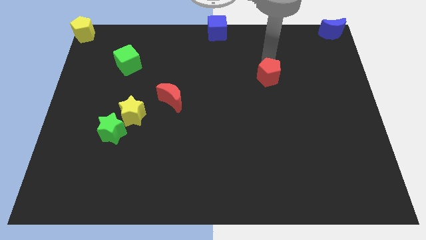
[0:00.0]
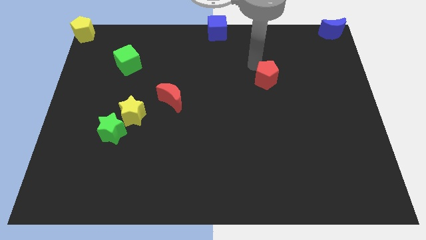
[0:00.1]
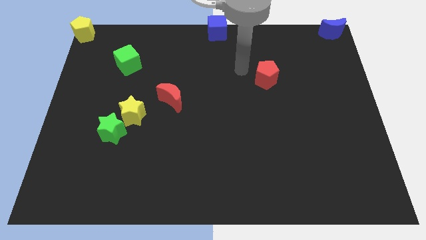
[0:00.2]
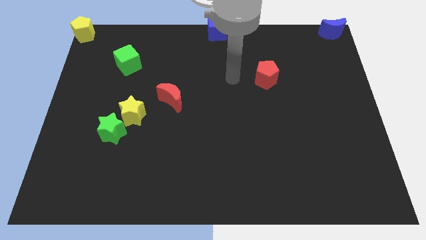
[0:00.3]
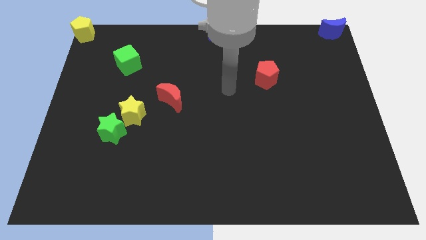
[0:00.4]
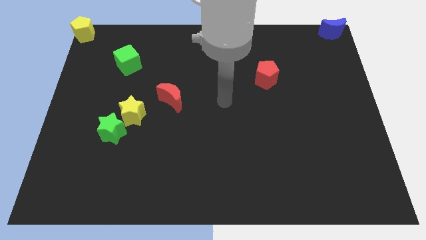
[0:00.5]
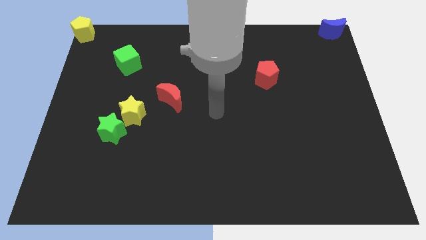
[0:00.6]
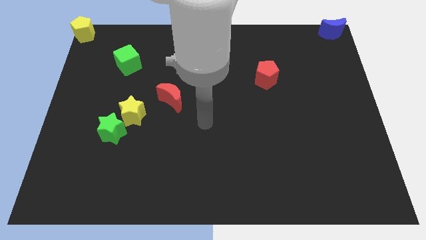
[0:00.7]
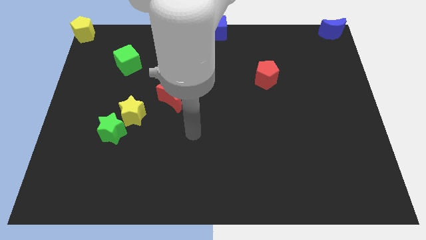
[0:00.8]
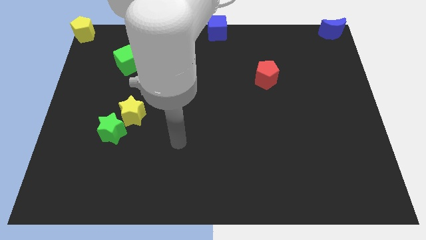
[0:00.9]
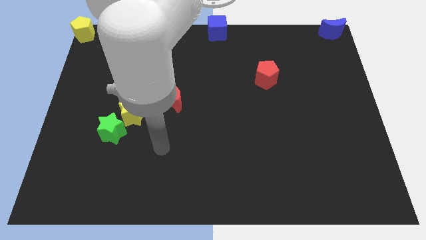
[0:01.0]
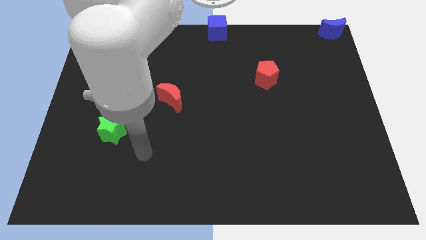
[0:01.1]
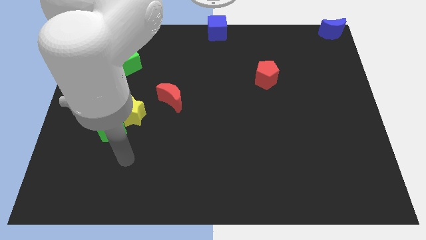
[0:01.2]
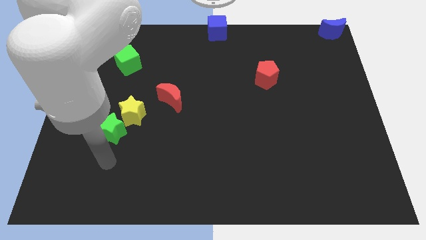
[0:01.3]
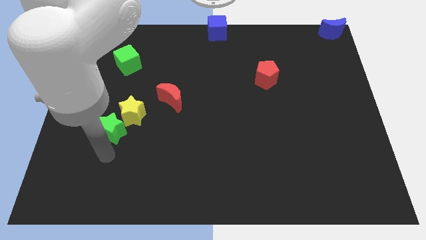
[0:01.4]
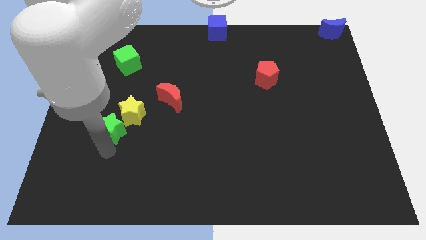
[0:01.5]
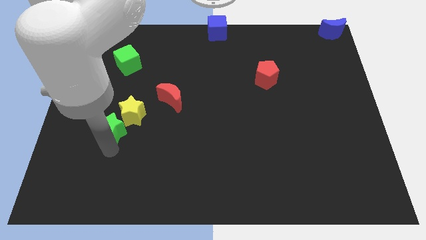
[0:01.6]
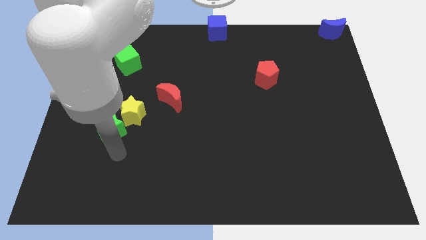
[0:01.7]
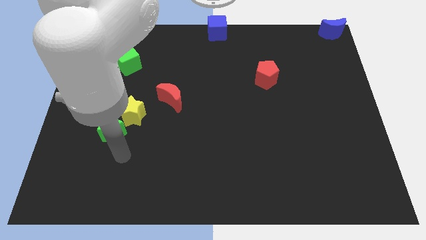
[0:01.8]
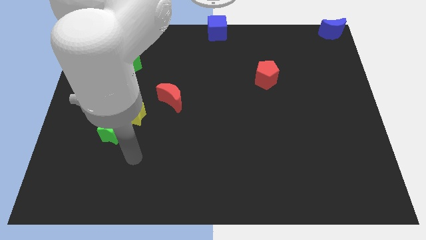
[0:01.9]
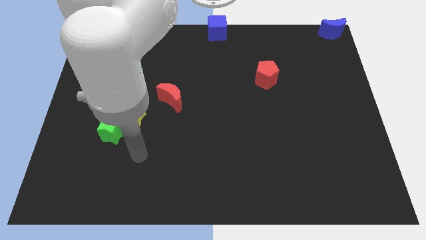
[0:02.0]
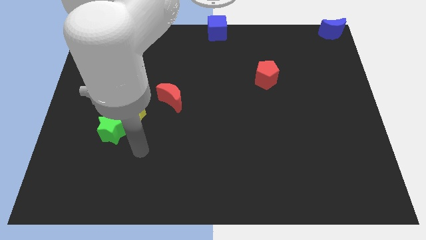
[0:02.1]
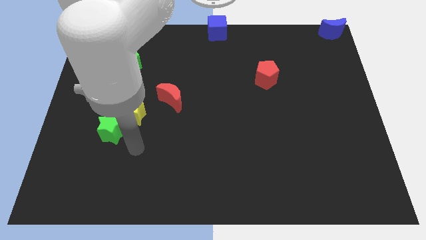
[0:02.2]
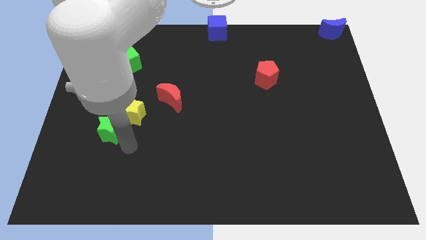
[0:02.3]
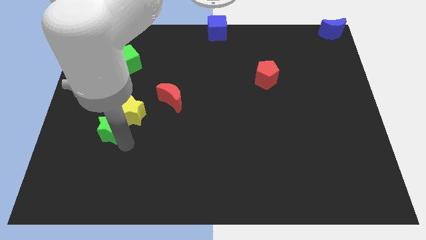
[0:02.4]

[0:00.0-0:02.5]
move your arm towards the green star

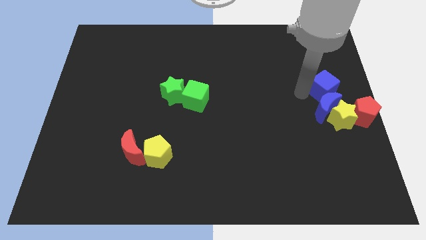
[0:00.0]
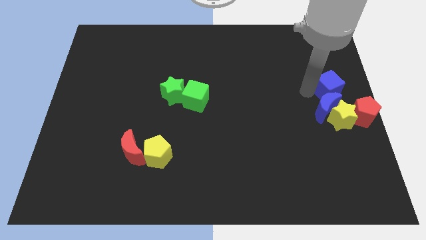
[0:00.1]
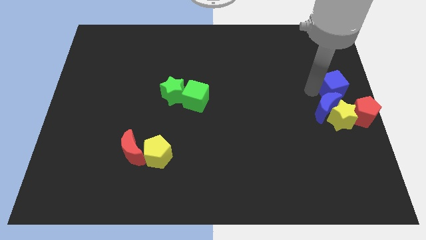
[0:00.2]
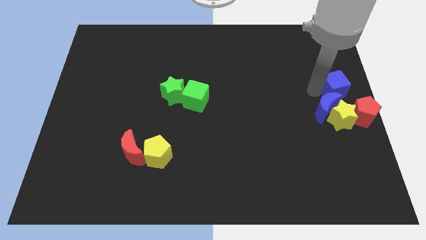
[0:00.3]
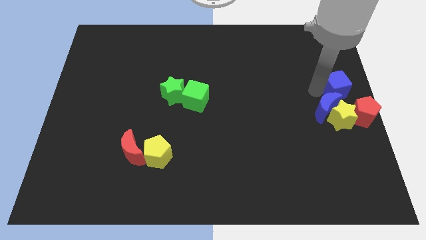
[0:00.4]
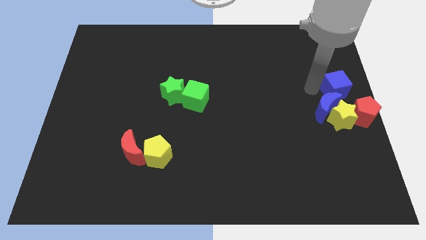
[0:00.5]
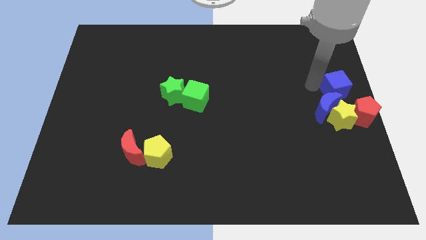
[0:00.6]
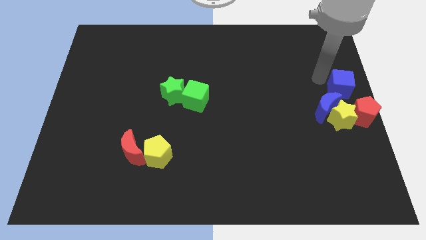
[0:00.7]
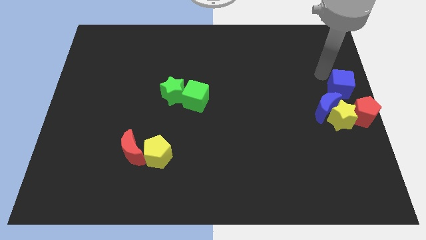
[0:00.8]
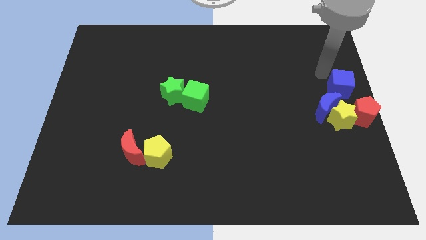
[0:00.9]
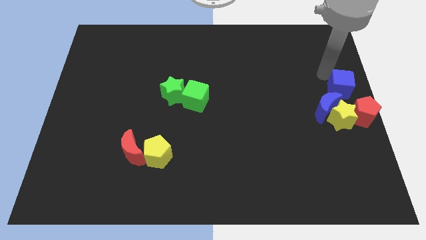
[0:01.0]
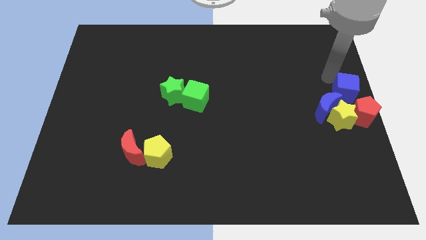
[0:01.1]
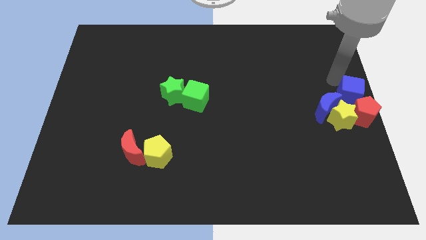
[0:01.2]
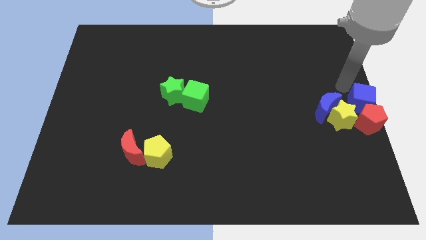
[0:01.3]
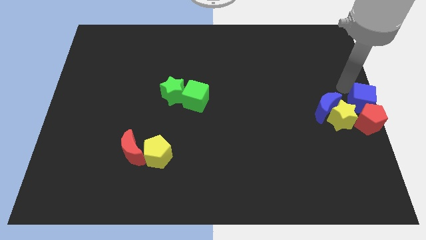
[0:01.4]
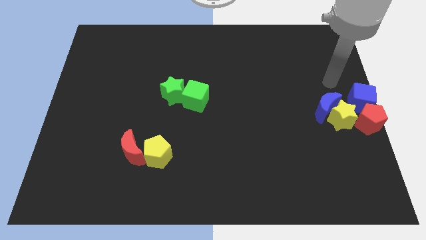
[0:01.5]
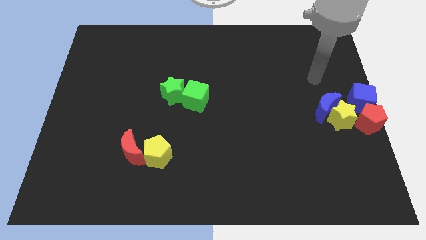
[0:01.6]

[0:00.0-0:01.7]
place blue cube to the top of red pentagon

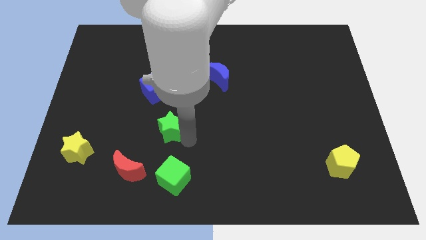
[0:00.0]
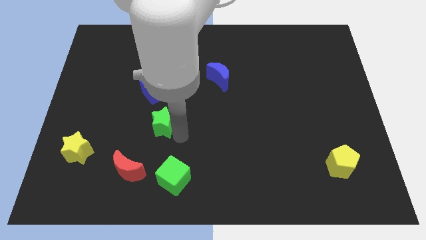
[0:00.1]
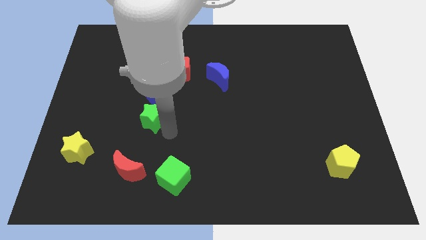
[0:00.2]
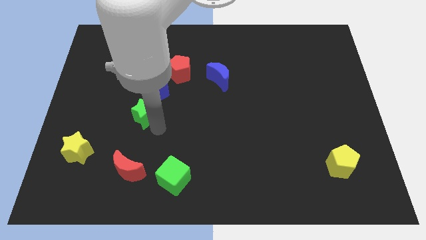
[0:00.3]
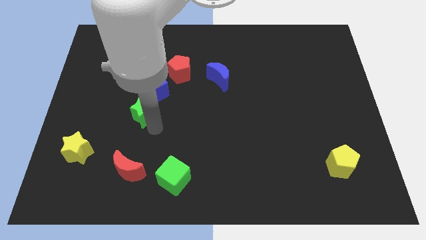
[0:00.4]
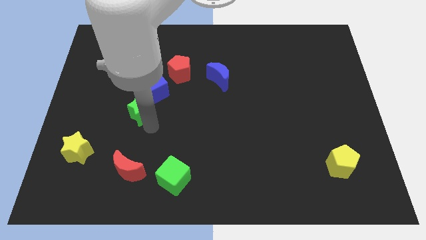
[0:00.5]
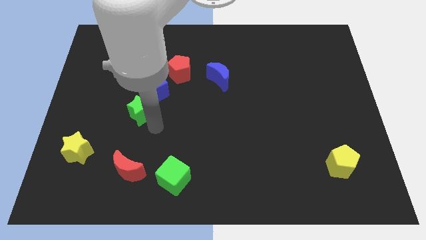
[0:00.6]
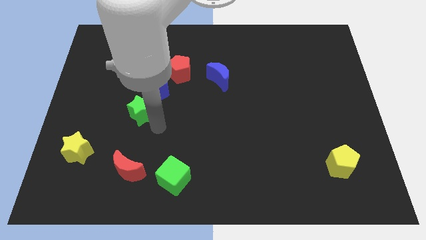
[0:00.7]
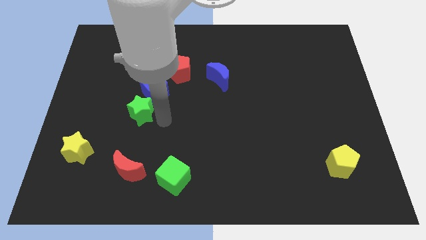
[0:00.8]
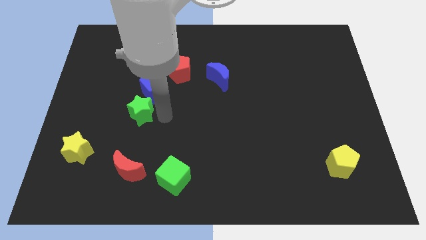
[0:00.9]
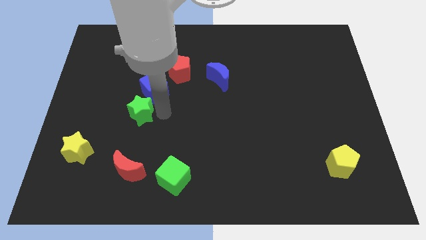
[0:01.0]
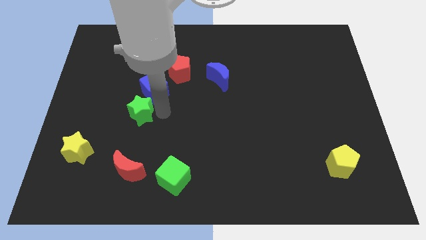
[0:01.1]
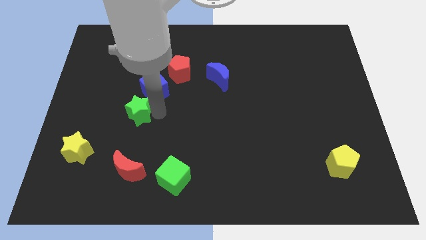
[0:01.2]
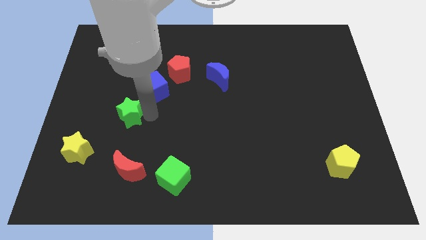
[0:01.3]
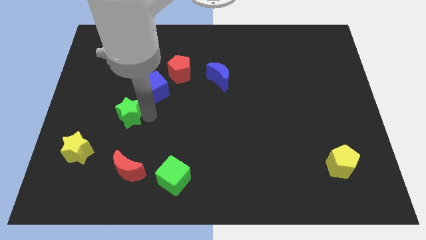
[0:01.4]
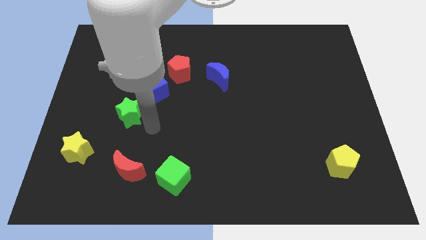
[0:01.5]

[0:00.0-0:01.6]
slide the green star diagonally bottom left to the blue cube

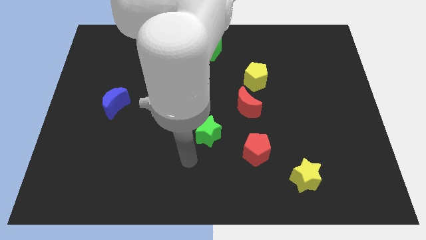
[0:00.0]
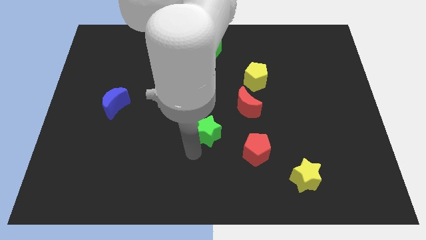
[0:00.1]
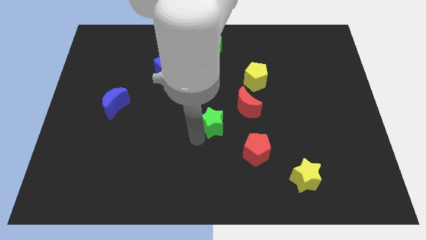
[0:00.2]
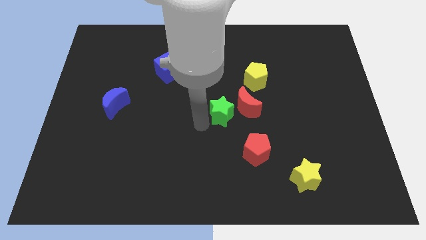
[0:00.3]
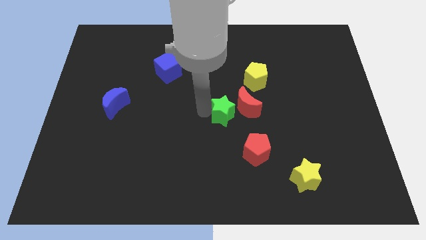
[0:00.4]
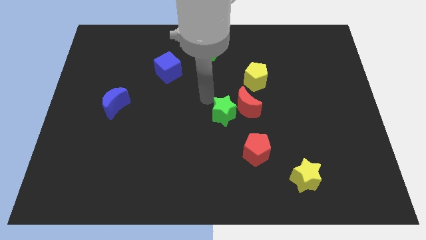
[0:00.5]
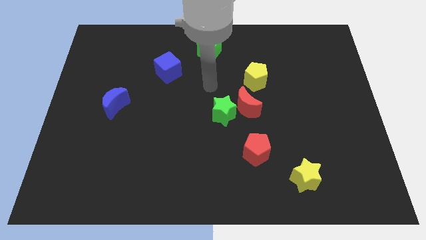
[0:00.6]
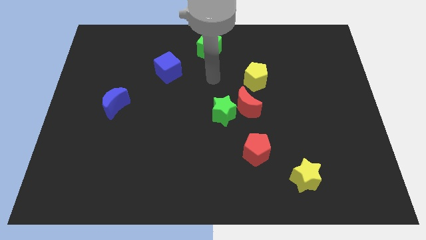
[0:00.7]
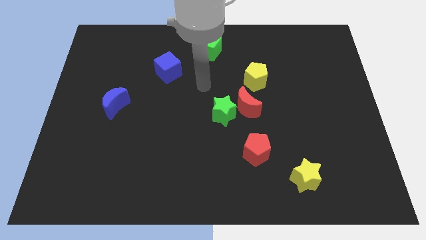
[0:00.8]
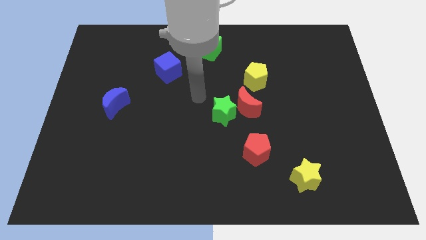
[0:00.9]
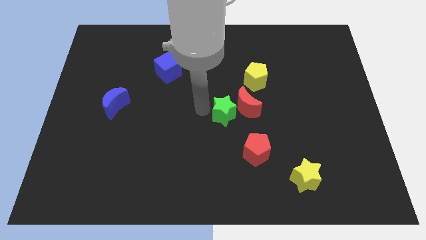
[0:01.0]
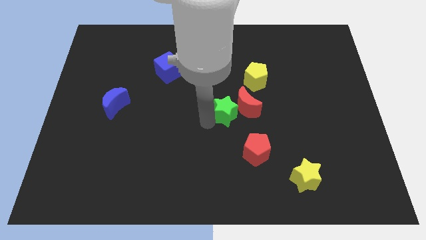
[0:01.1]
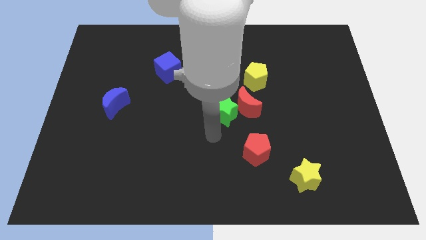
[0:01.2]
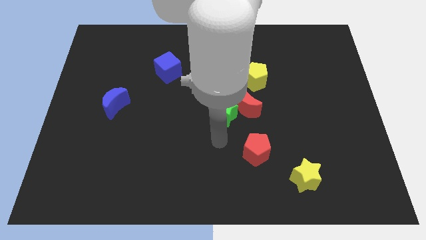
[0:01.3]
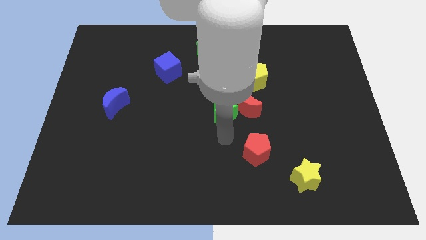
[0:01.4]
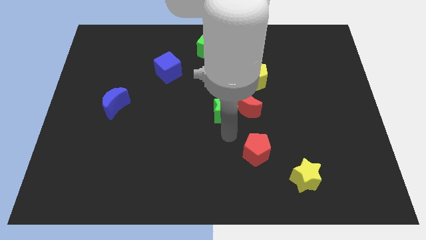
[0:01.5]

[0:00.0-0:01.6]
push the green star into red moon

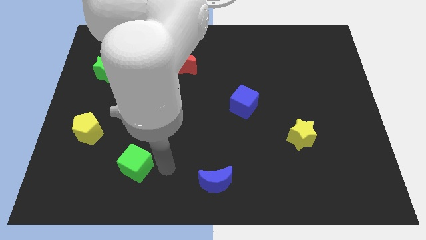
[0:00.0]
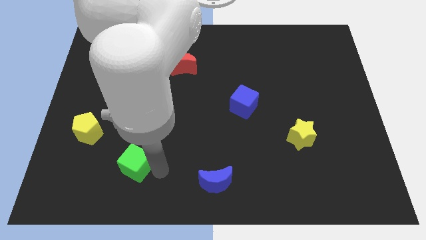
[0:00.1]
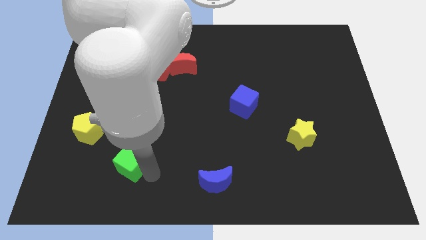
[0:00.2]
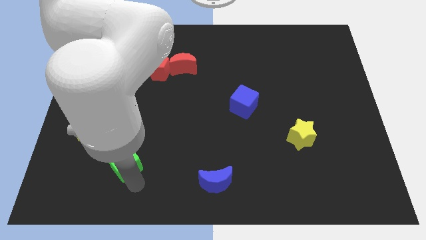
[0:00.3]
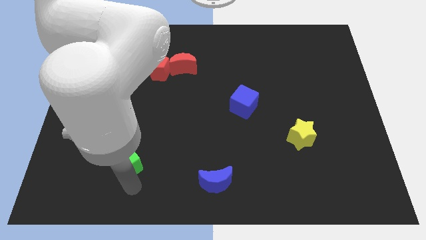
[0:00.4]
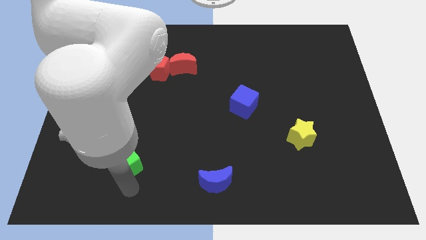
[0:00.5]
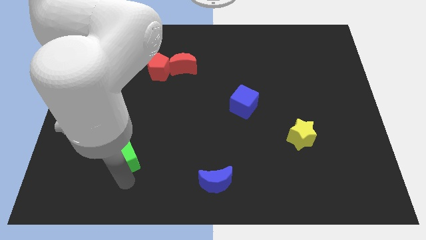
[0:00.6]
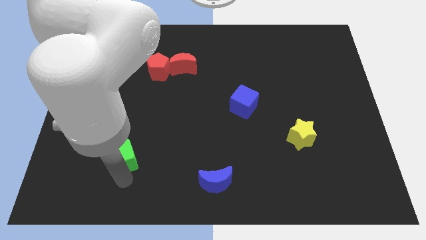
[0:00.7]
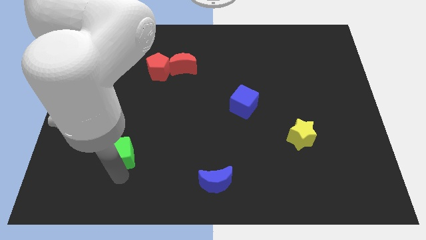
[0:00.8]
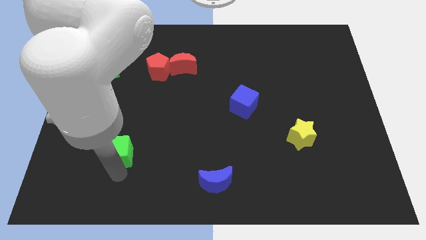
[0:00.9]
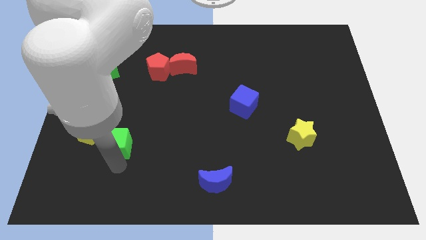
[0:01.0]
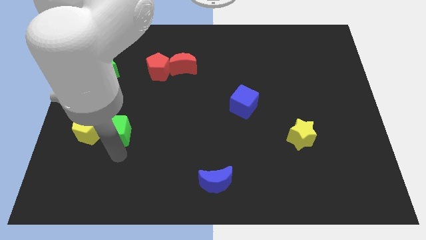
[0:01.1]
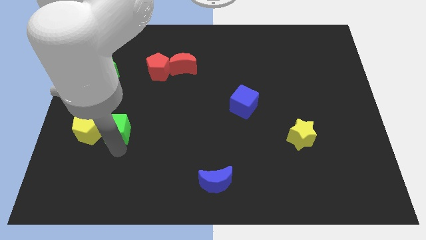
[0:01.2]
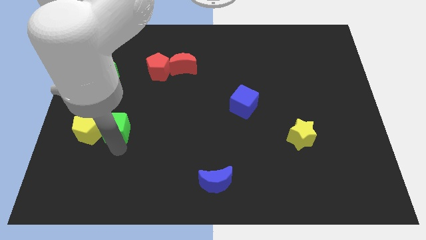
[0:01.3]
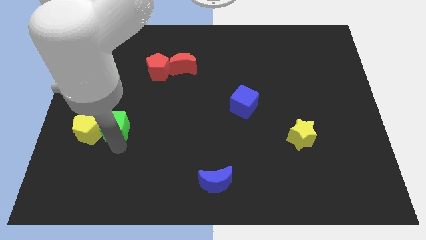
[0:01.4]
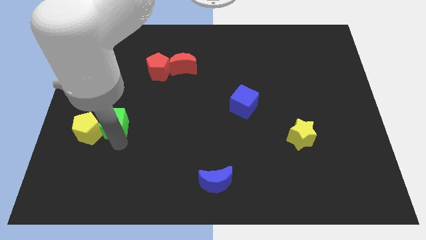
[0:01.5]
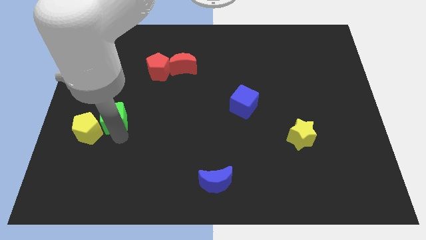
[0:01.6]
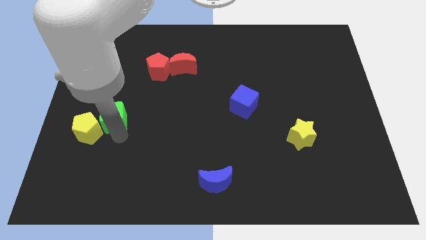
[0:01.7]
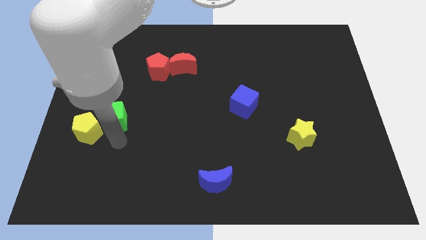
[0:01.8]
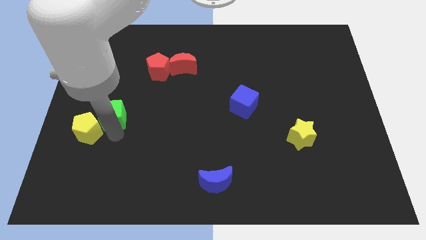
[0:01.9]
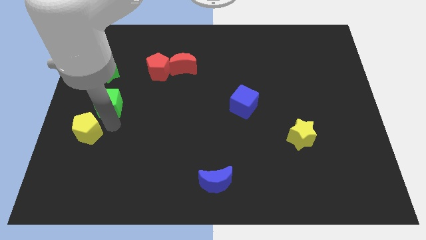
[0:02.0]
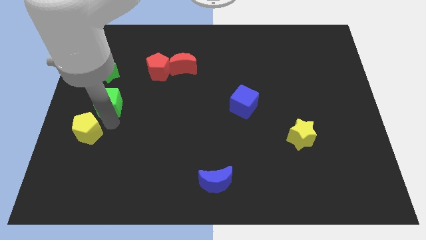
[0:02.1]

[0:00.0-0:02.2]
move the green cube below the green star
